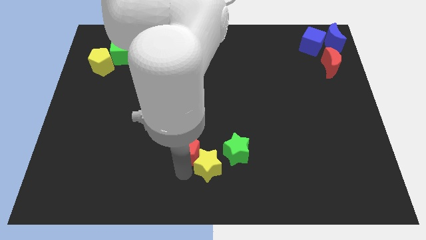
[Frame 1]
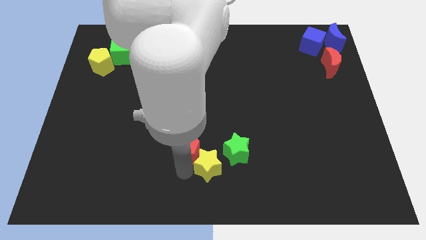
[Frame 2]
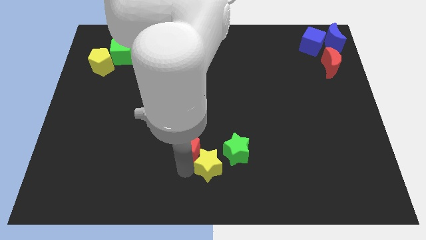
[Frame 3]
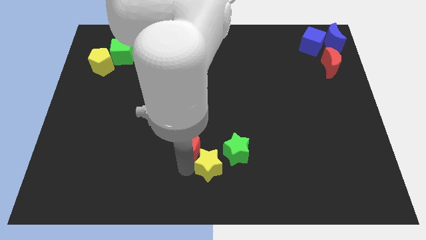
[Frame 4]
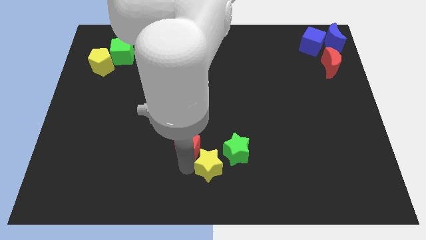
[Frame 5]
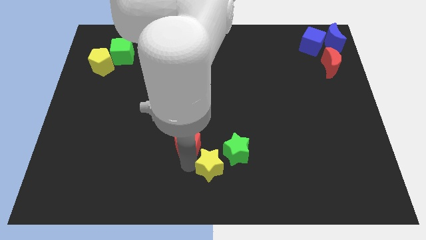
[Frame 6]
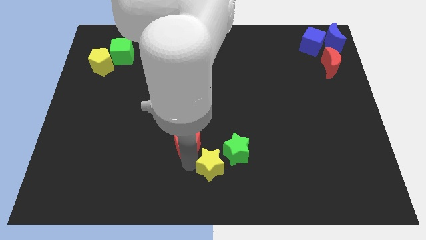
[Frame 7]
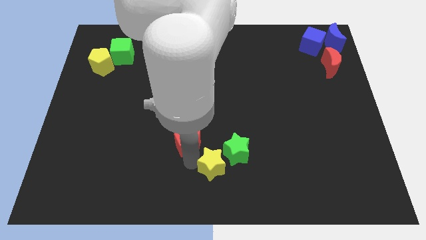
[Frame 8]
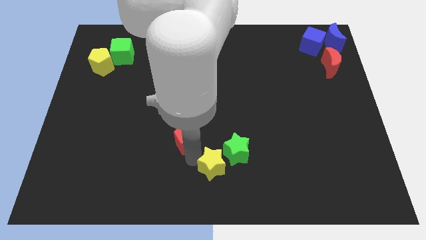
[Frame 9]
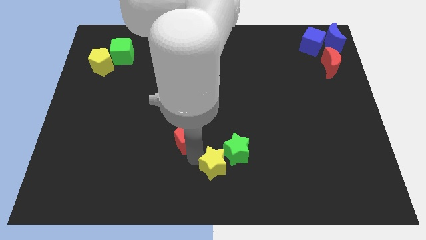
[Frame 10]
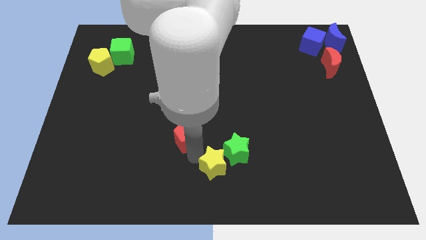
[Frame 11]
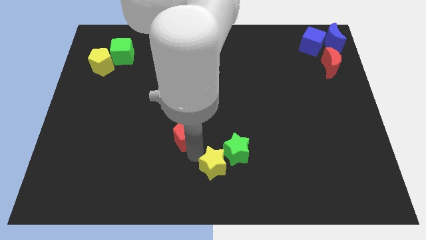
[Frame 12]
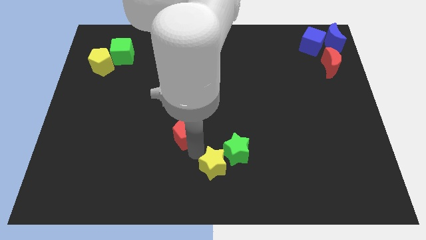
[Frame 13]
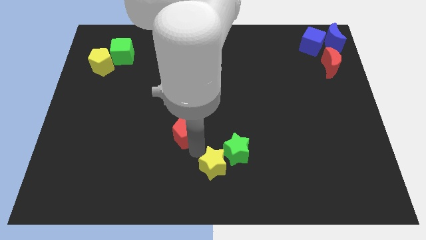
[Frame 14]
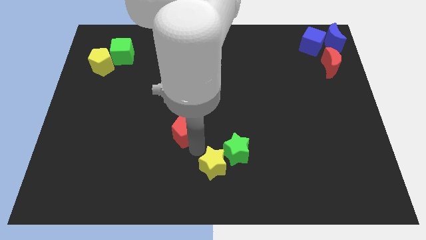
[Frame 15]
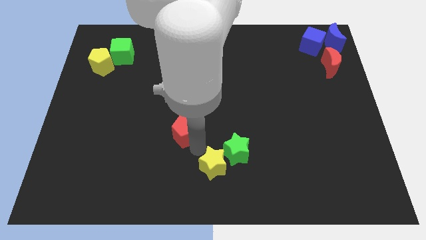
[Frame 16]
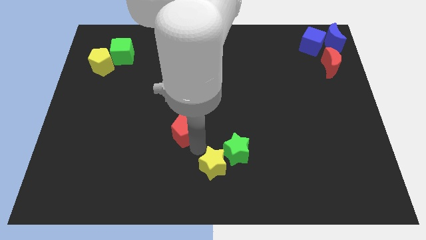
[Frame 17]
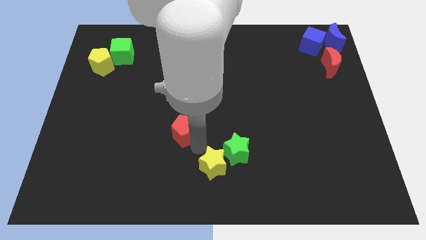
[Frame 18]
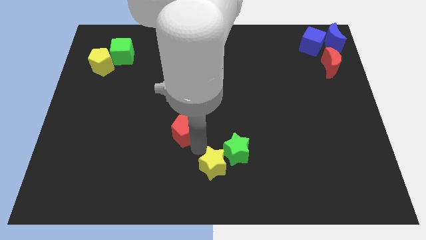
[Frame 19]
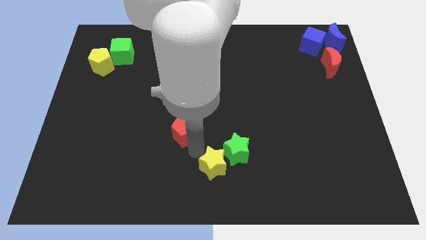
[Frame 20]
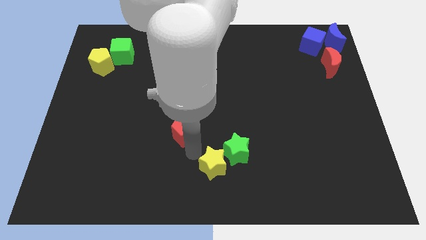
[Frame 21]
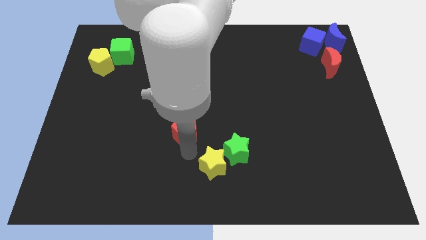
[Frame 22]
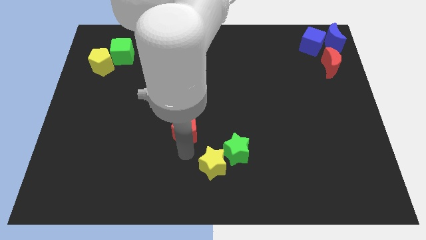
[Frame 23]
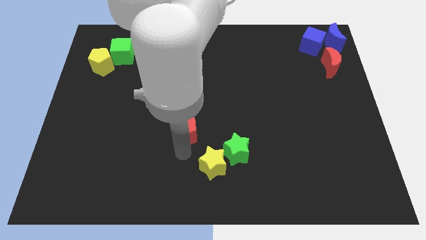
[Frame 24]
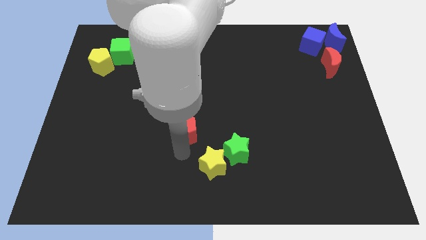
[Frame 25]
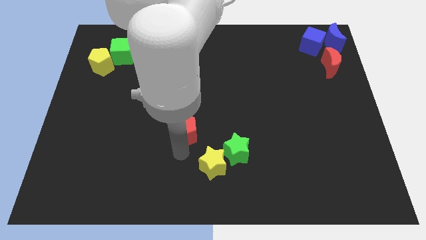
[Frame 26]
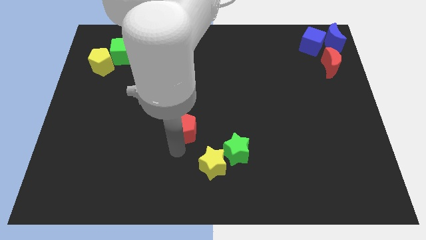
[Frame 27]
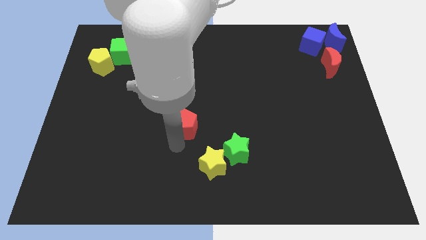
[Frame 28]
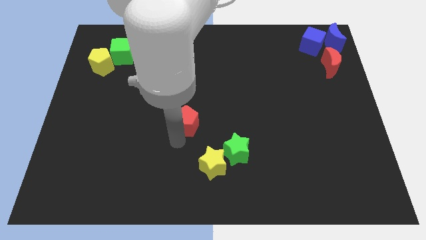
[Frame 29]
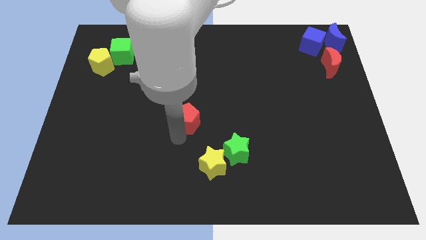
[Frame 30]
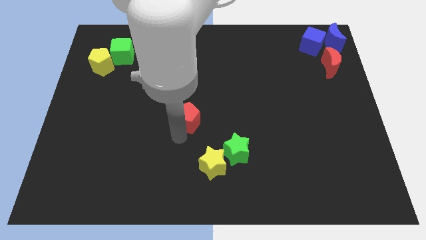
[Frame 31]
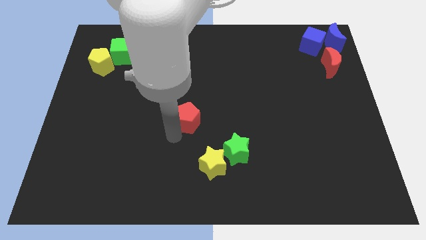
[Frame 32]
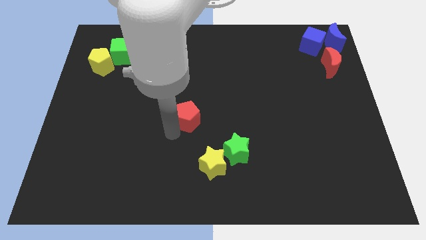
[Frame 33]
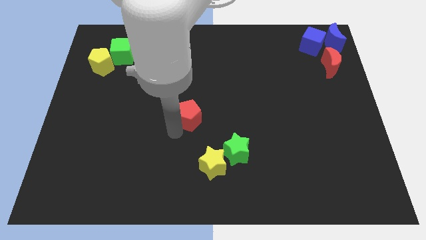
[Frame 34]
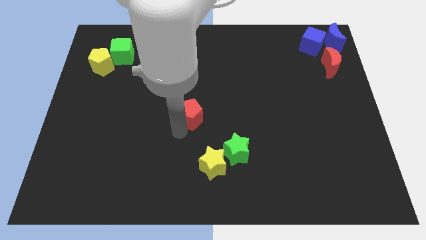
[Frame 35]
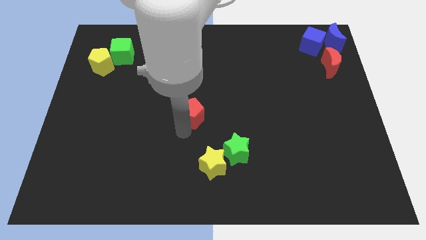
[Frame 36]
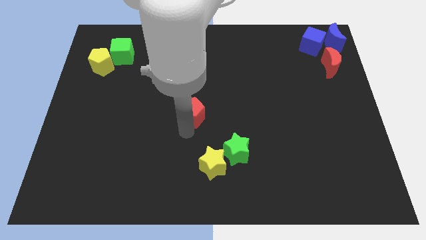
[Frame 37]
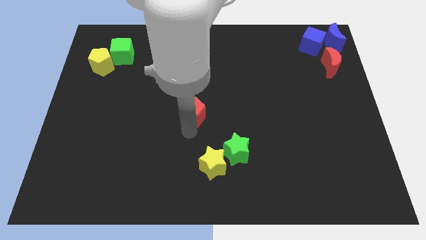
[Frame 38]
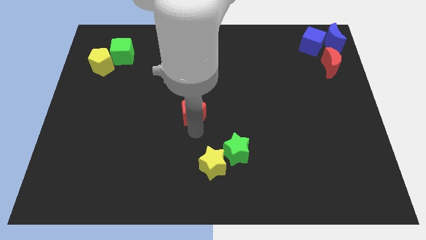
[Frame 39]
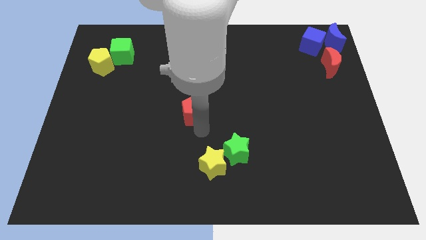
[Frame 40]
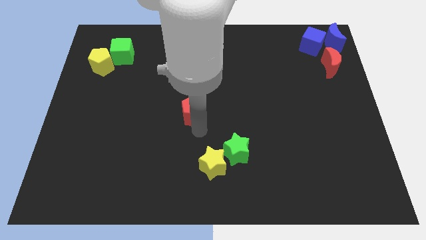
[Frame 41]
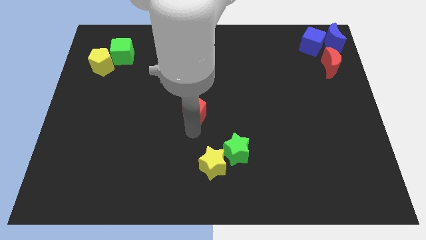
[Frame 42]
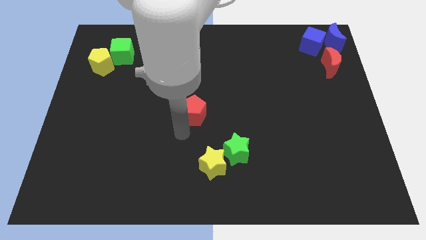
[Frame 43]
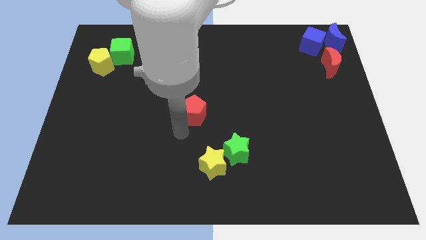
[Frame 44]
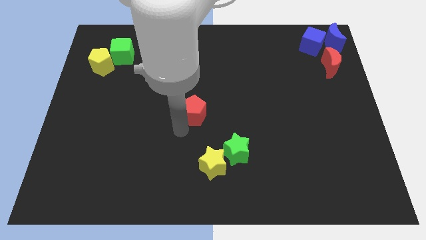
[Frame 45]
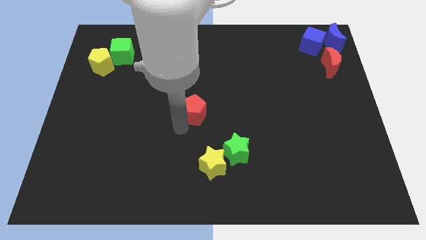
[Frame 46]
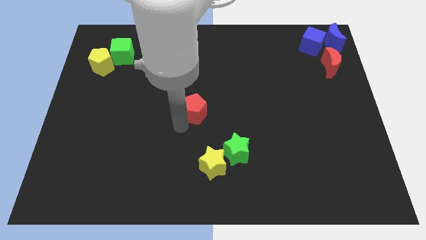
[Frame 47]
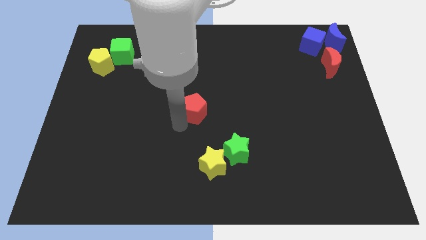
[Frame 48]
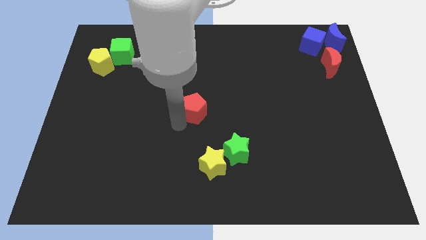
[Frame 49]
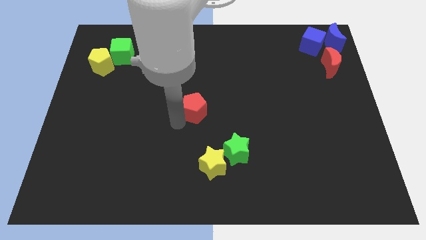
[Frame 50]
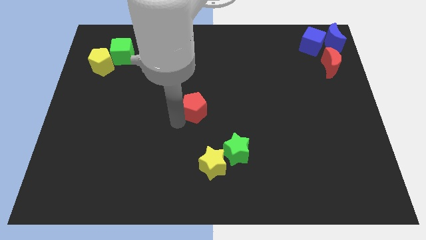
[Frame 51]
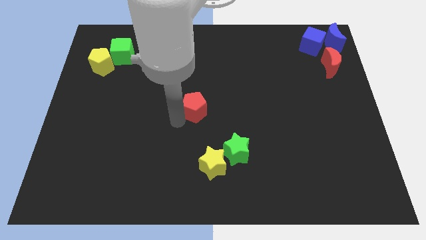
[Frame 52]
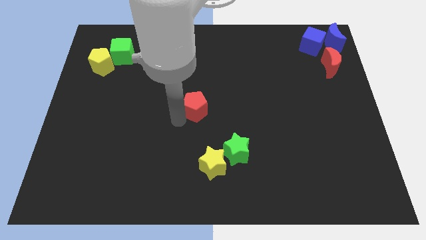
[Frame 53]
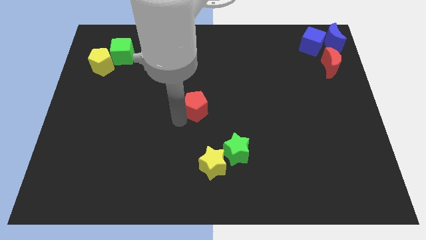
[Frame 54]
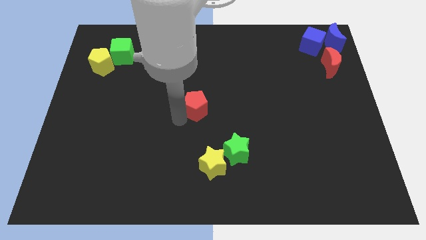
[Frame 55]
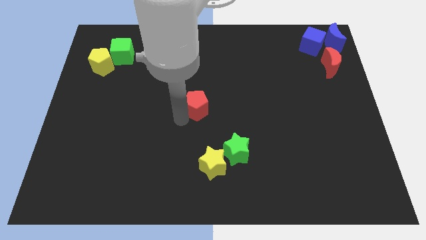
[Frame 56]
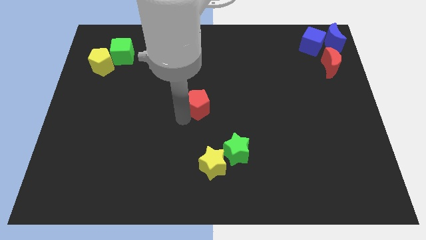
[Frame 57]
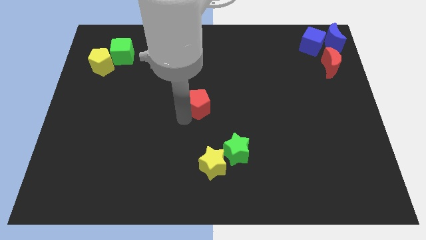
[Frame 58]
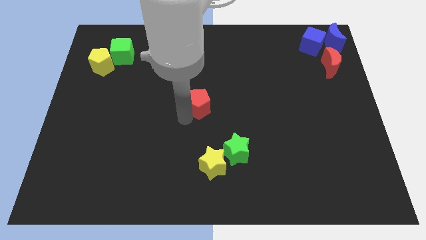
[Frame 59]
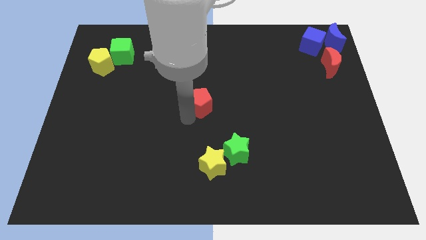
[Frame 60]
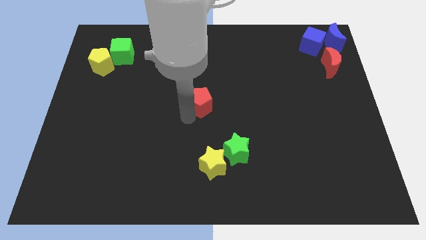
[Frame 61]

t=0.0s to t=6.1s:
put red pentagon at the center

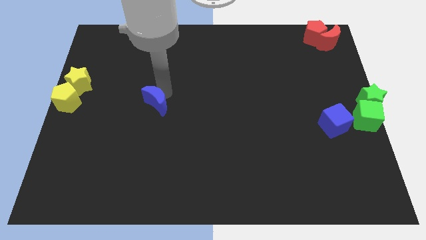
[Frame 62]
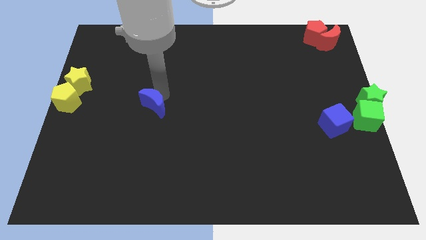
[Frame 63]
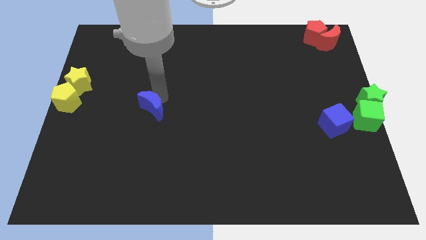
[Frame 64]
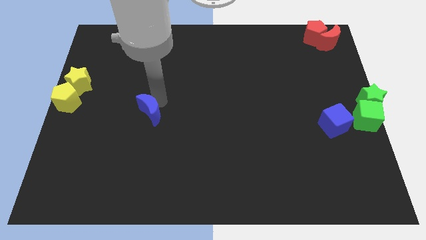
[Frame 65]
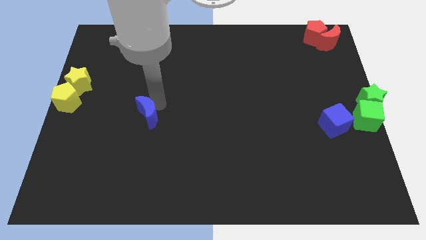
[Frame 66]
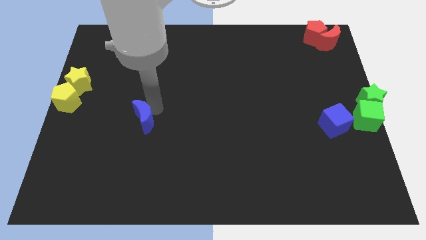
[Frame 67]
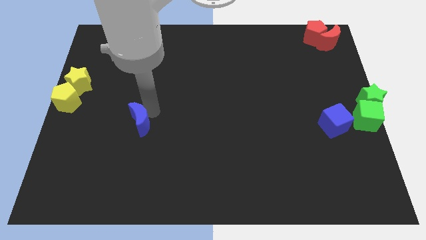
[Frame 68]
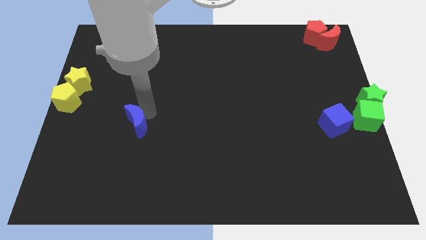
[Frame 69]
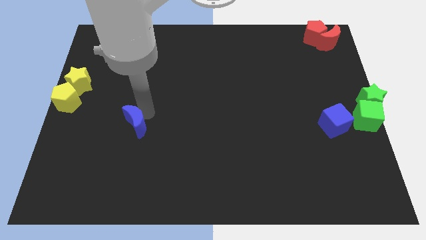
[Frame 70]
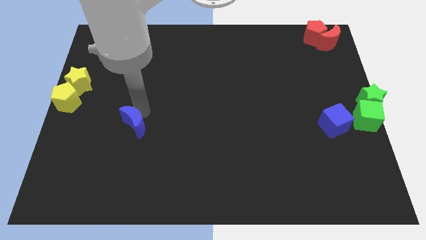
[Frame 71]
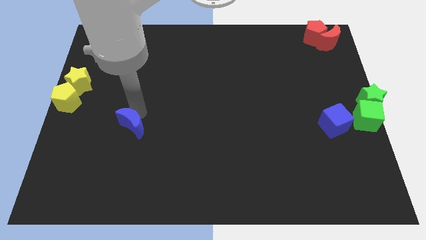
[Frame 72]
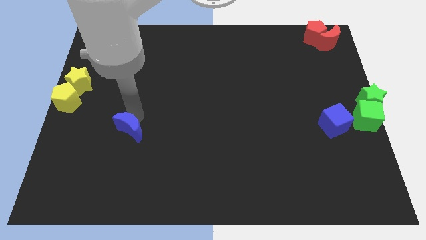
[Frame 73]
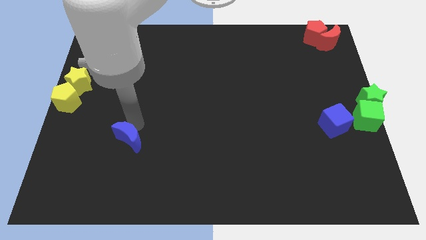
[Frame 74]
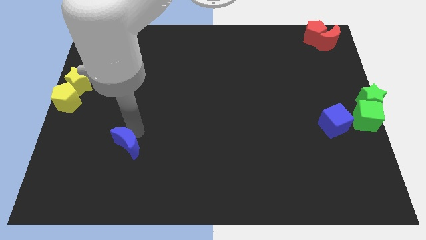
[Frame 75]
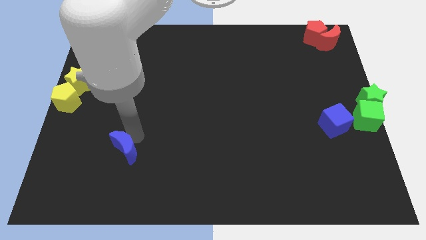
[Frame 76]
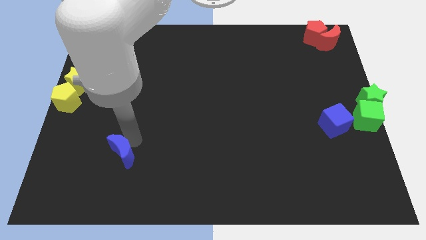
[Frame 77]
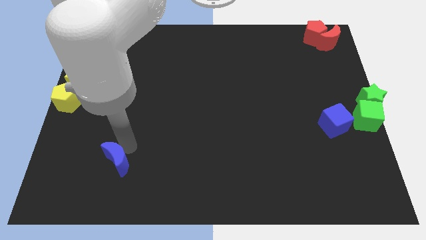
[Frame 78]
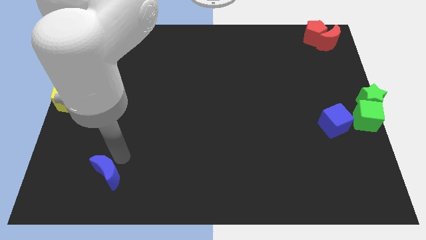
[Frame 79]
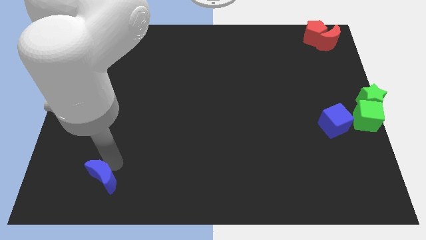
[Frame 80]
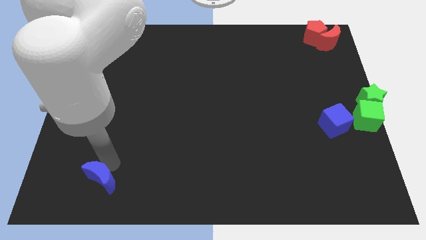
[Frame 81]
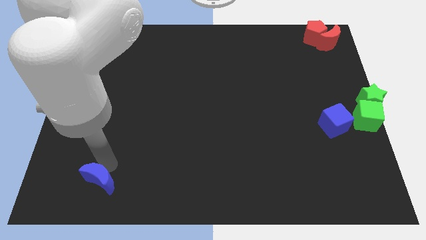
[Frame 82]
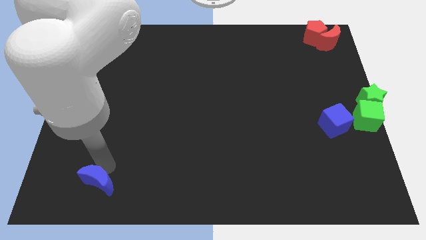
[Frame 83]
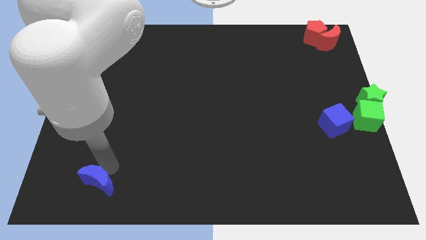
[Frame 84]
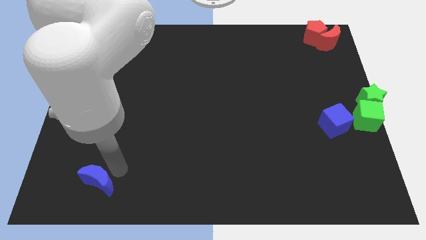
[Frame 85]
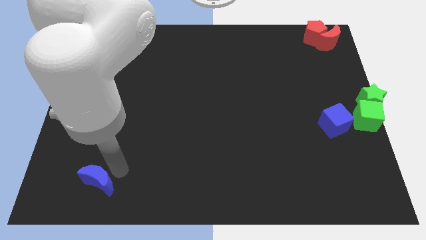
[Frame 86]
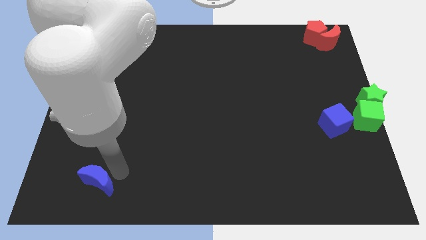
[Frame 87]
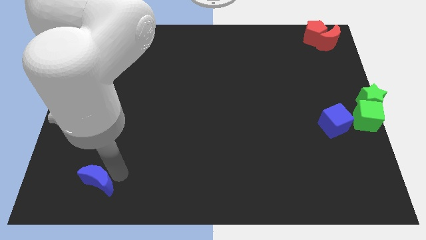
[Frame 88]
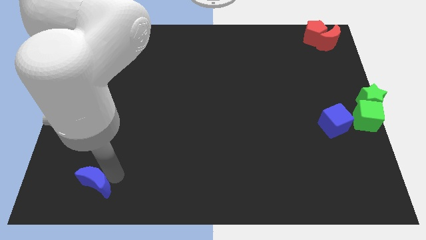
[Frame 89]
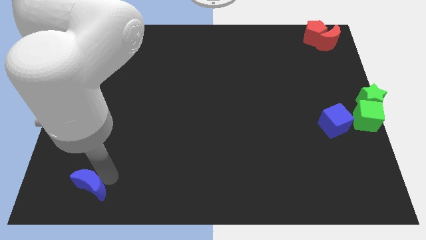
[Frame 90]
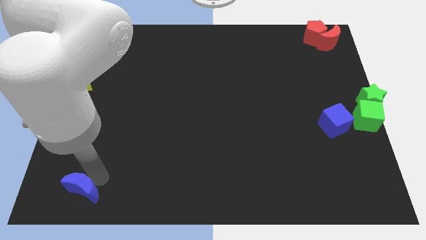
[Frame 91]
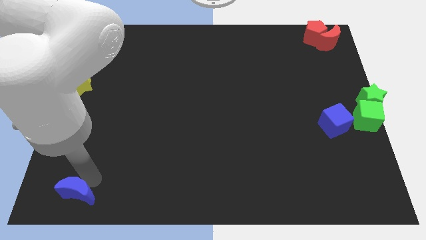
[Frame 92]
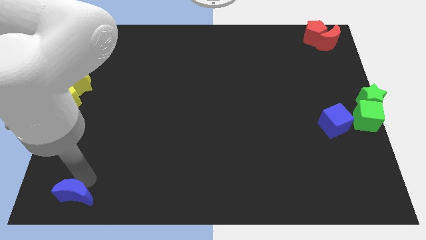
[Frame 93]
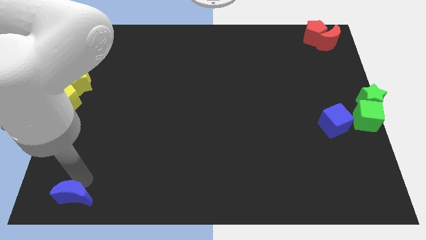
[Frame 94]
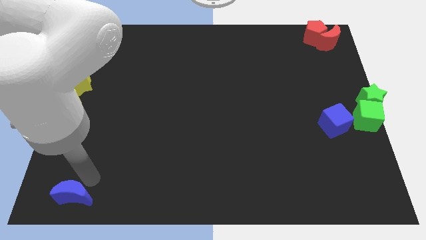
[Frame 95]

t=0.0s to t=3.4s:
move the blue crescent towards the left bottom of the board
